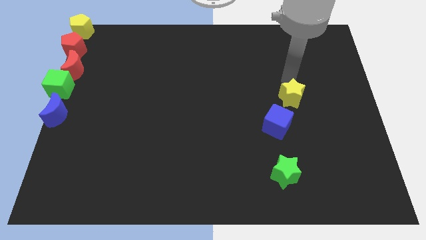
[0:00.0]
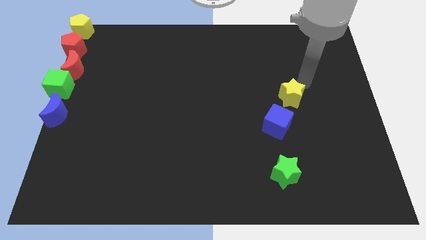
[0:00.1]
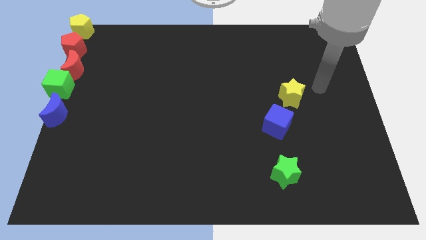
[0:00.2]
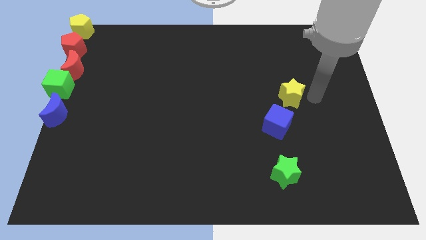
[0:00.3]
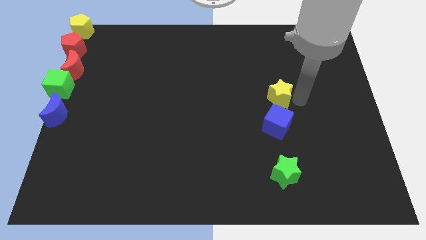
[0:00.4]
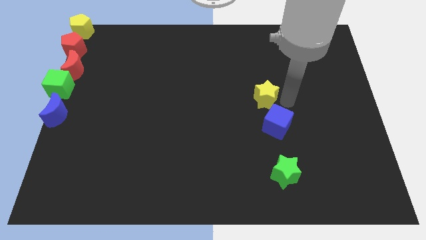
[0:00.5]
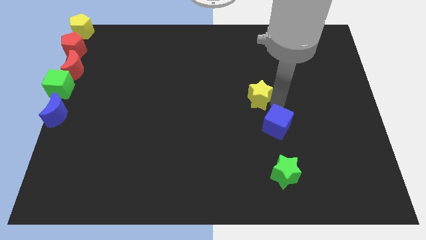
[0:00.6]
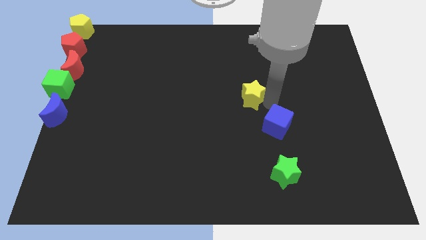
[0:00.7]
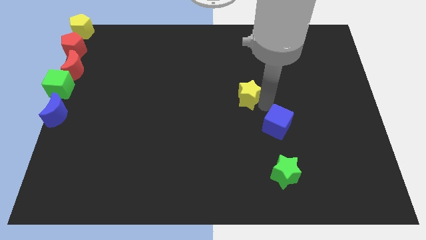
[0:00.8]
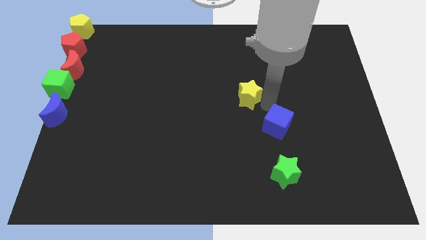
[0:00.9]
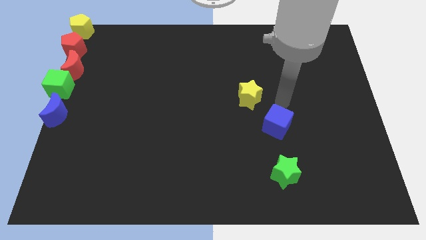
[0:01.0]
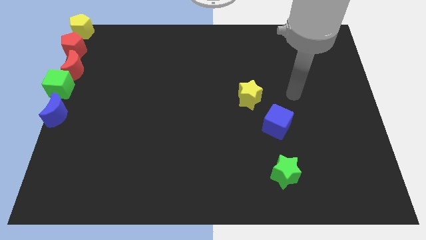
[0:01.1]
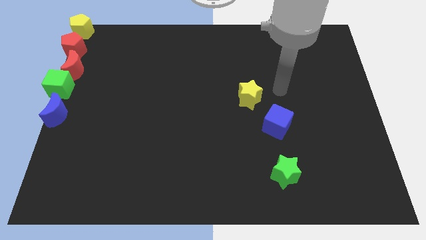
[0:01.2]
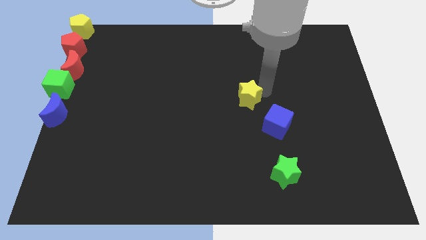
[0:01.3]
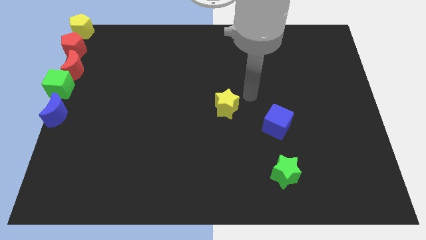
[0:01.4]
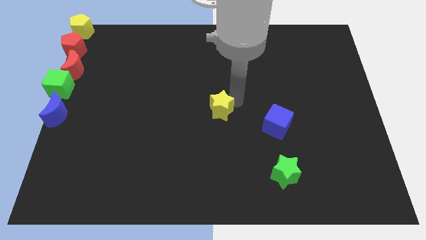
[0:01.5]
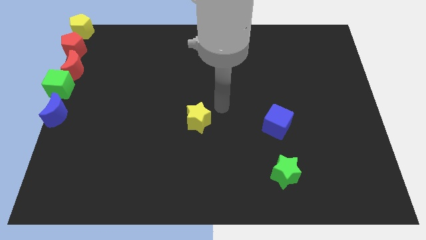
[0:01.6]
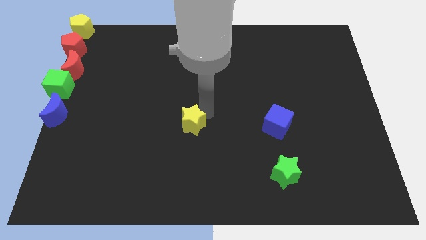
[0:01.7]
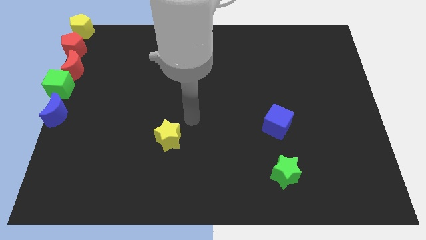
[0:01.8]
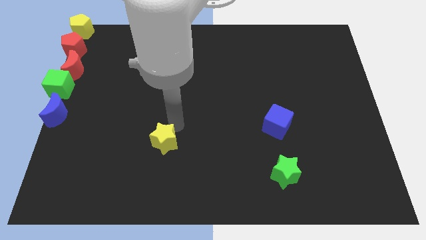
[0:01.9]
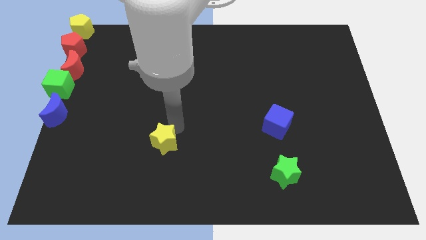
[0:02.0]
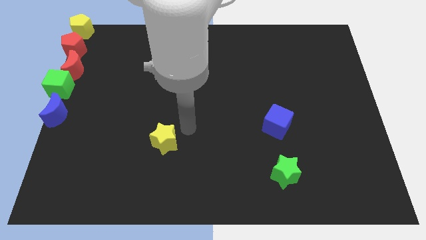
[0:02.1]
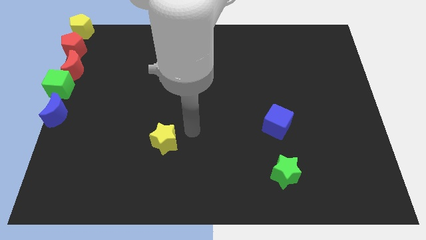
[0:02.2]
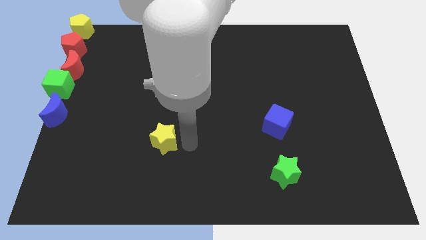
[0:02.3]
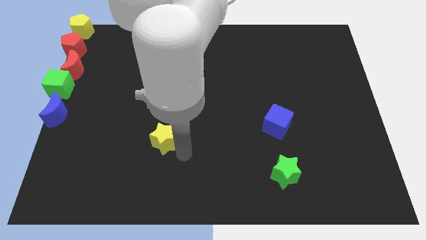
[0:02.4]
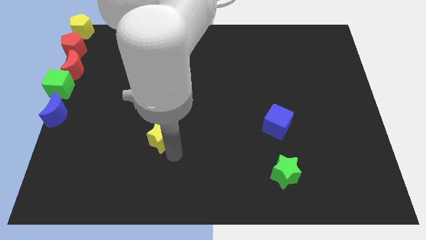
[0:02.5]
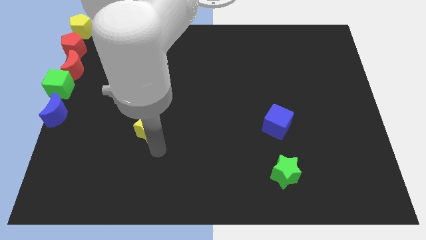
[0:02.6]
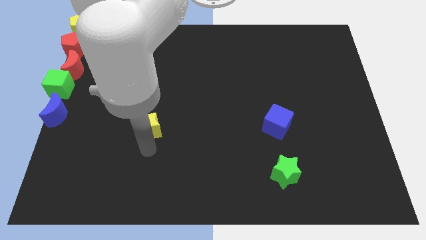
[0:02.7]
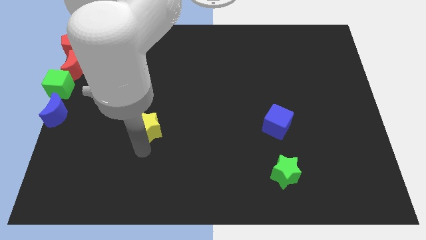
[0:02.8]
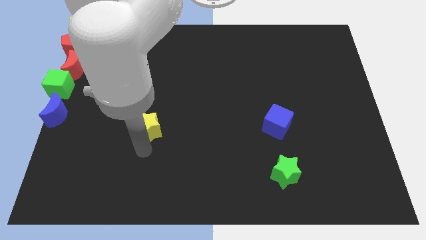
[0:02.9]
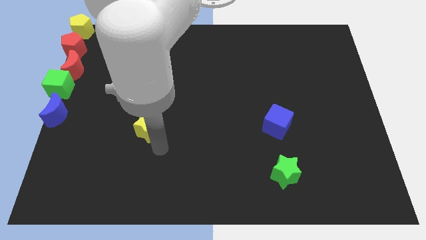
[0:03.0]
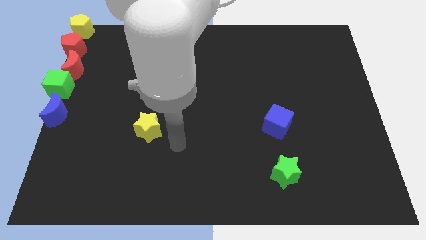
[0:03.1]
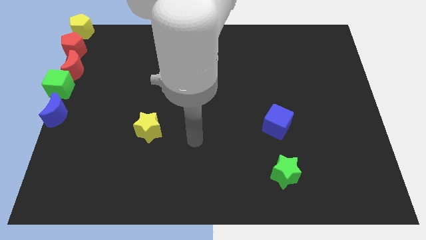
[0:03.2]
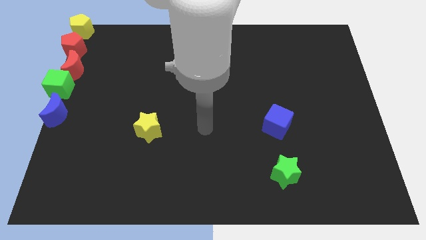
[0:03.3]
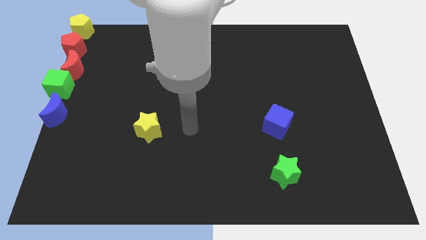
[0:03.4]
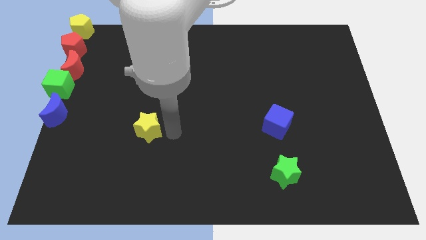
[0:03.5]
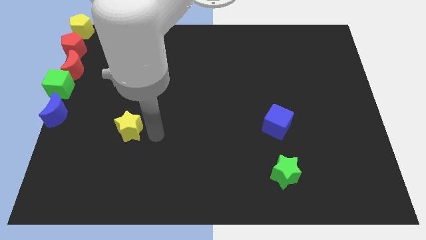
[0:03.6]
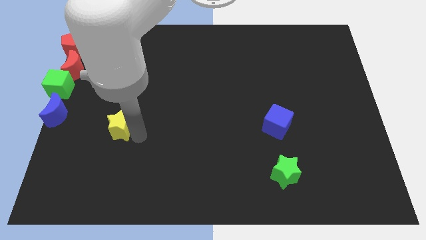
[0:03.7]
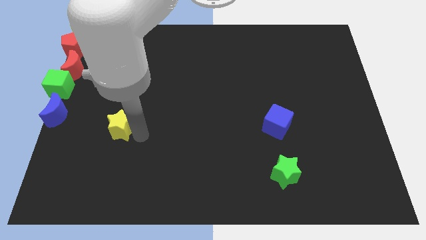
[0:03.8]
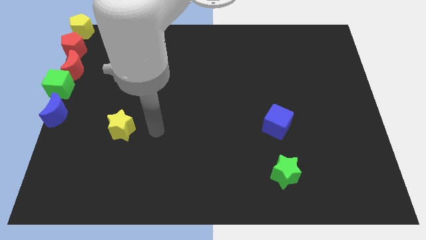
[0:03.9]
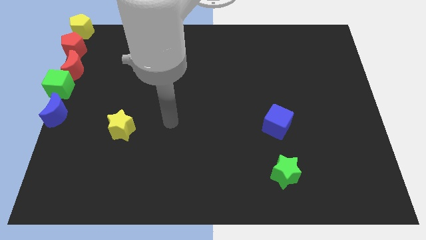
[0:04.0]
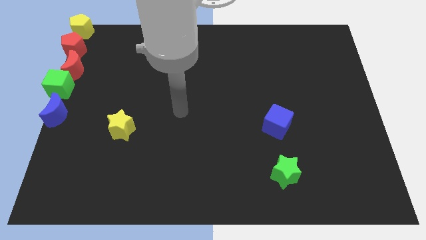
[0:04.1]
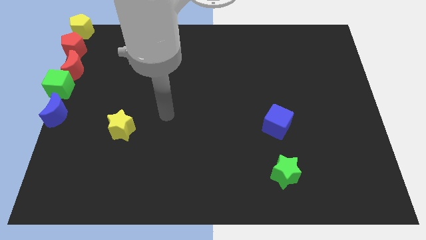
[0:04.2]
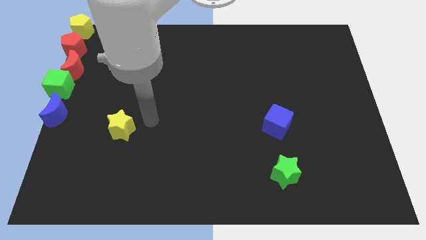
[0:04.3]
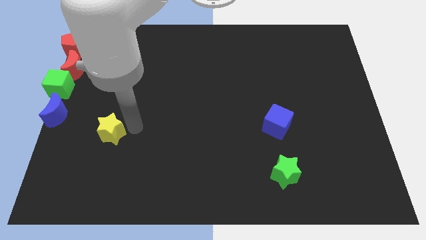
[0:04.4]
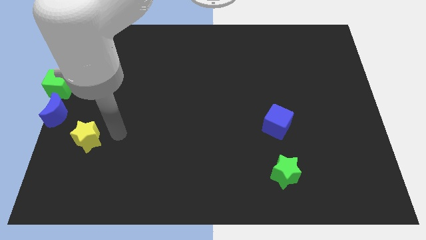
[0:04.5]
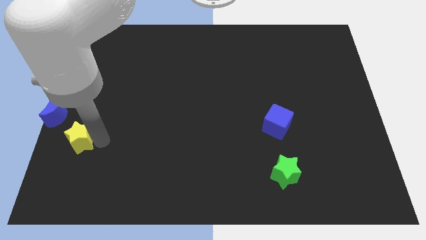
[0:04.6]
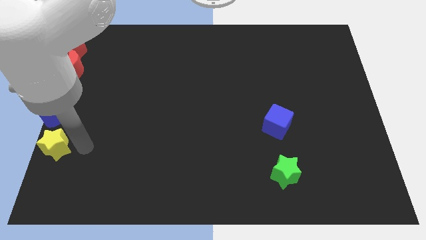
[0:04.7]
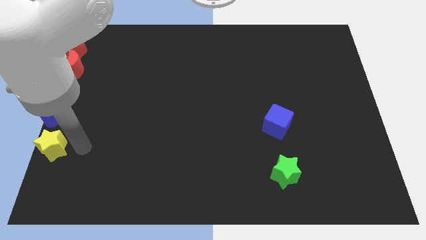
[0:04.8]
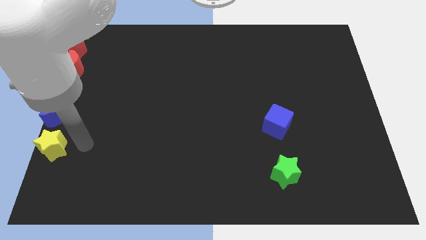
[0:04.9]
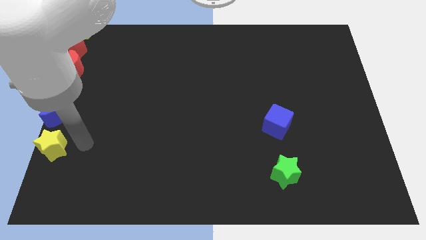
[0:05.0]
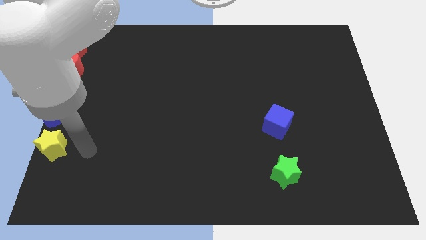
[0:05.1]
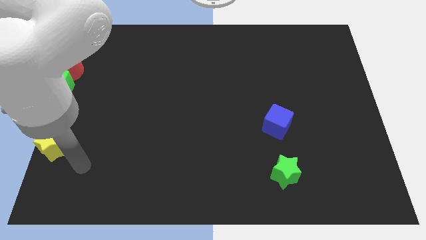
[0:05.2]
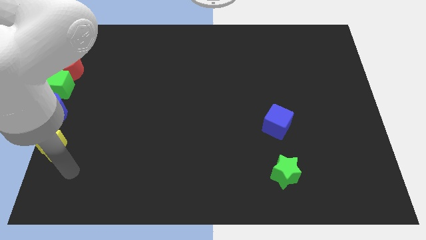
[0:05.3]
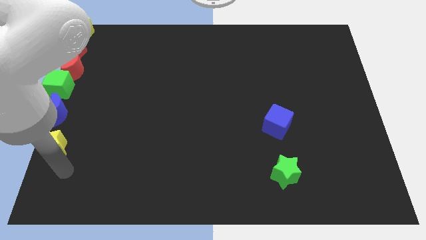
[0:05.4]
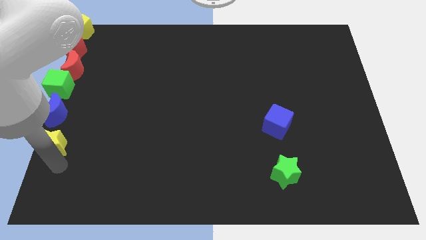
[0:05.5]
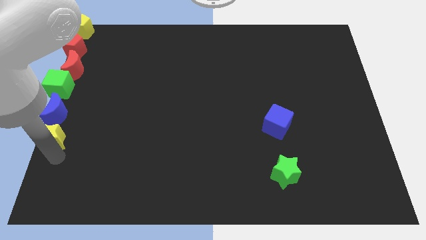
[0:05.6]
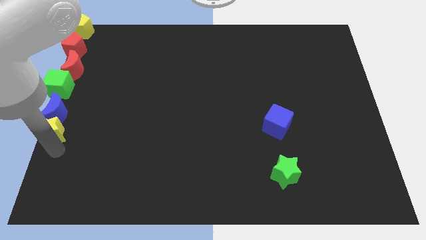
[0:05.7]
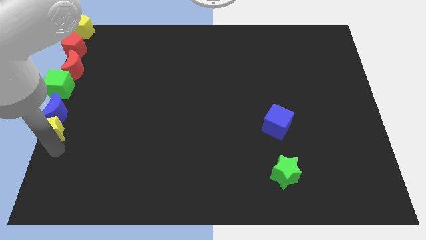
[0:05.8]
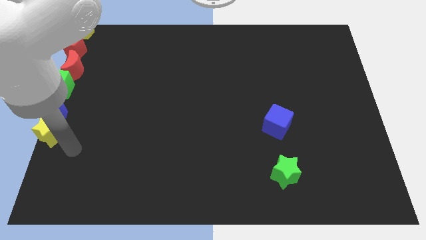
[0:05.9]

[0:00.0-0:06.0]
move the yellow star below the blue crescent

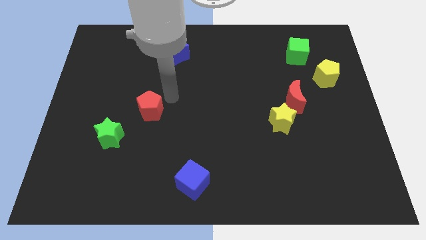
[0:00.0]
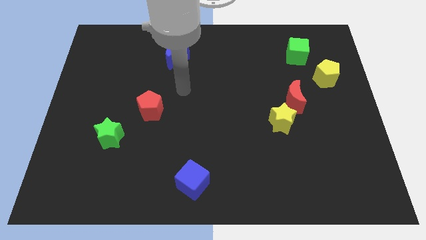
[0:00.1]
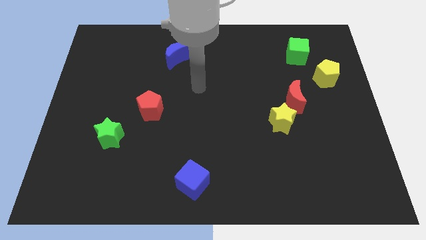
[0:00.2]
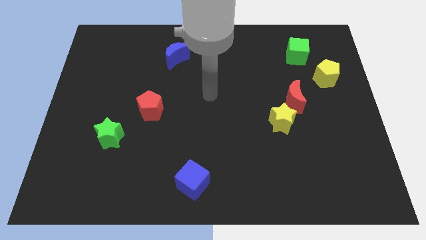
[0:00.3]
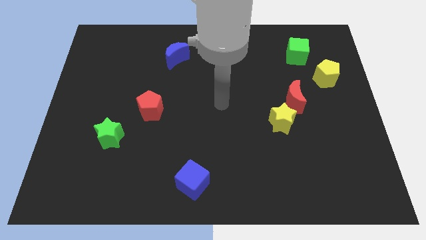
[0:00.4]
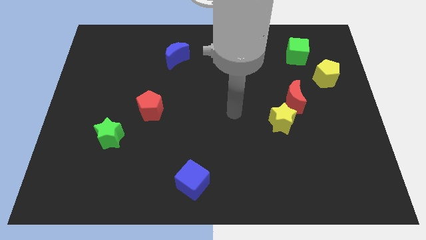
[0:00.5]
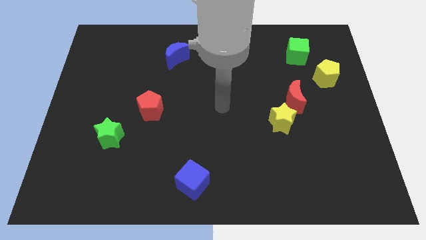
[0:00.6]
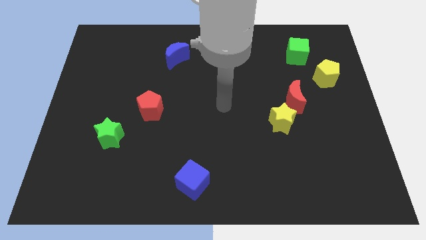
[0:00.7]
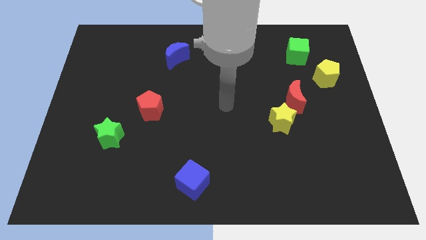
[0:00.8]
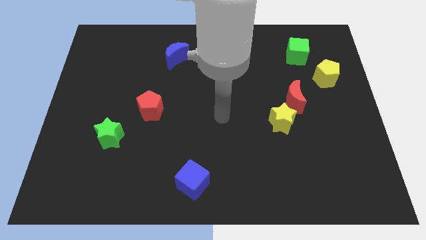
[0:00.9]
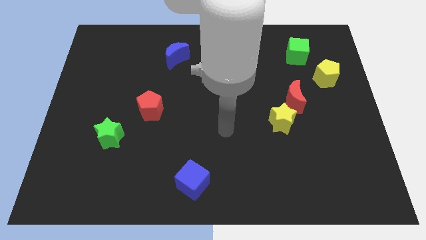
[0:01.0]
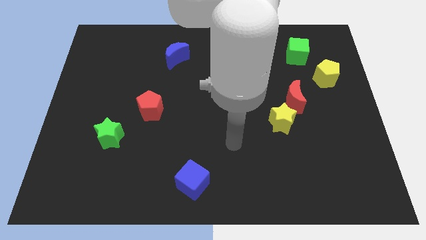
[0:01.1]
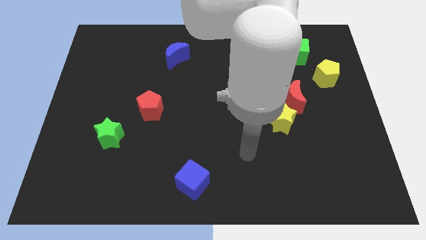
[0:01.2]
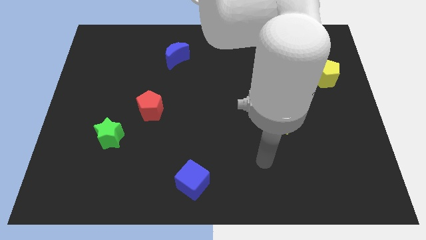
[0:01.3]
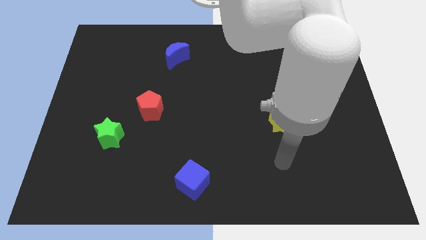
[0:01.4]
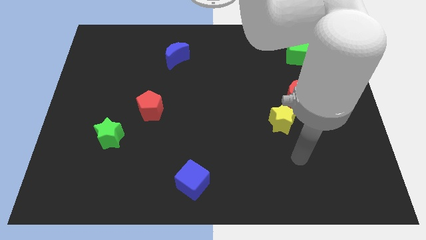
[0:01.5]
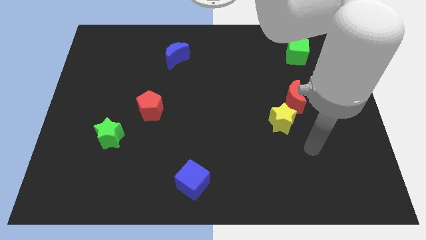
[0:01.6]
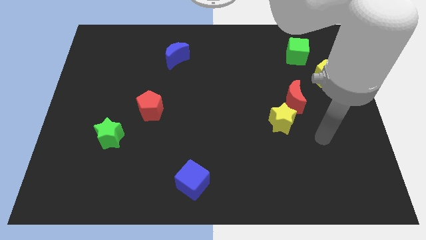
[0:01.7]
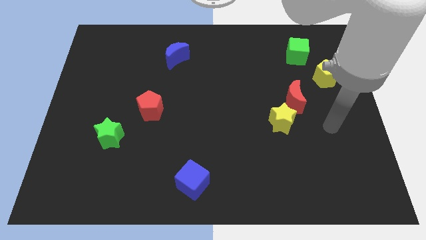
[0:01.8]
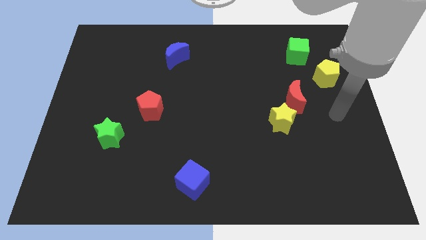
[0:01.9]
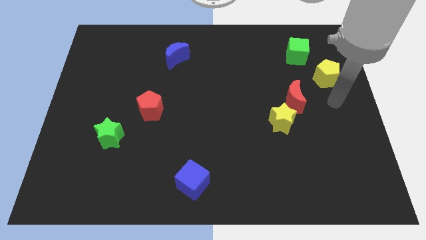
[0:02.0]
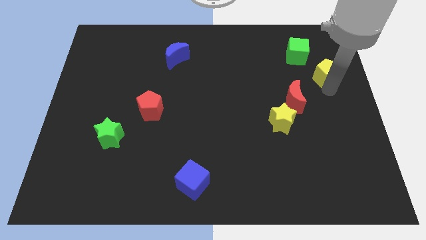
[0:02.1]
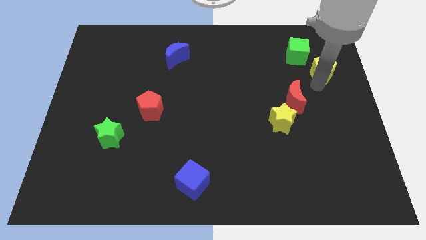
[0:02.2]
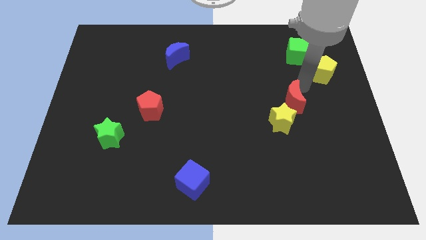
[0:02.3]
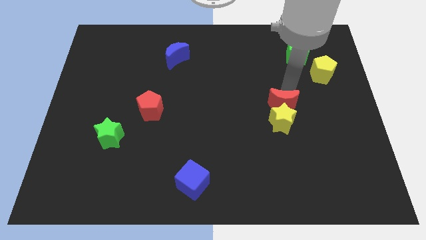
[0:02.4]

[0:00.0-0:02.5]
point your arm close to yellow pentagon

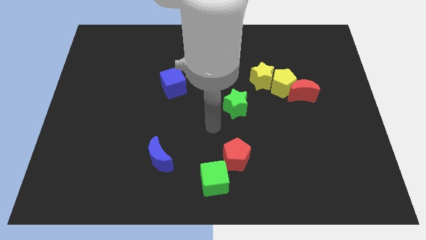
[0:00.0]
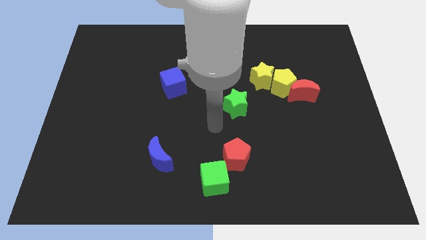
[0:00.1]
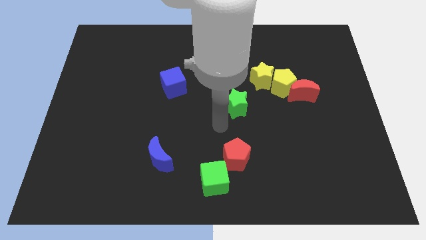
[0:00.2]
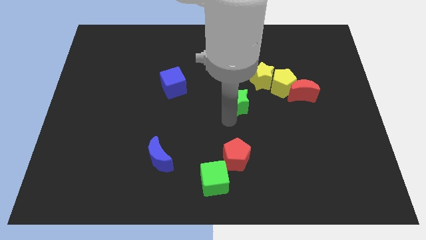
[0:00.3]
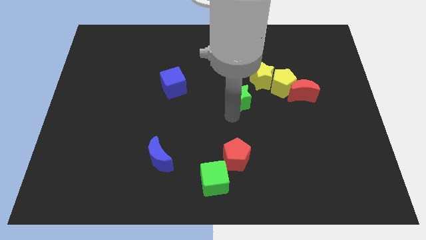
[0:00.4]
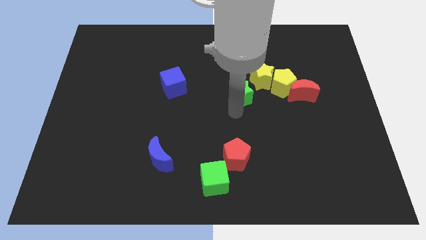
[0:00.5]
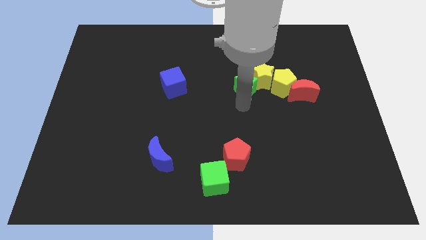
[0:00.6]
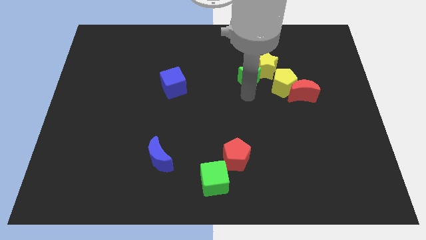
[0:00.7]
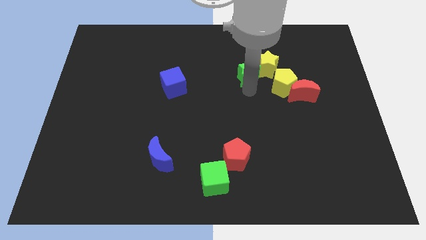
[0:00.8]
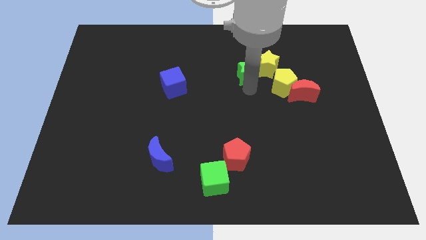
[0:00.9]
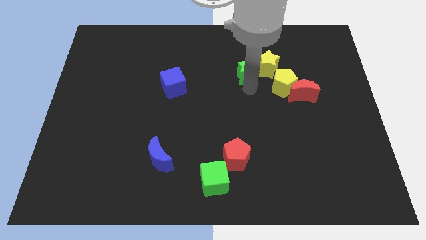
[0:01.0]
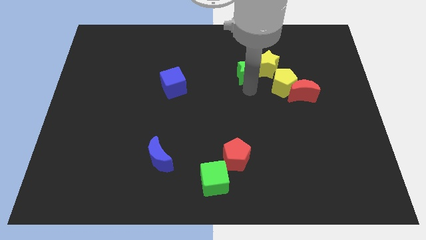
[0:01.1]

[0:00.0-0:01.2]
push the green star to the left of the yellow star
